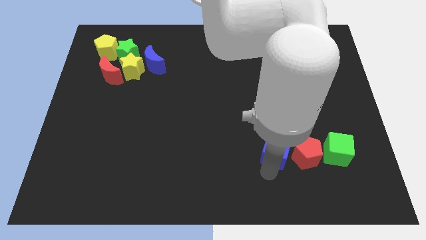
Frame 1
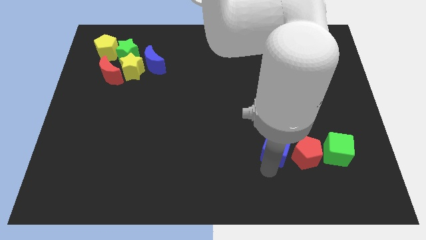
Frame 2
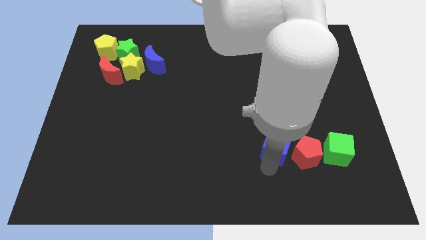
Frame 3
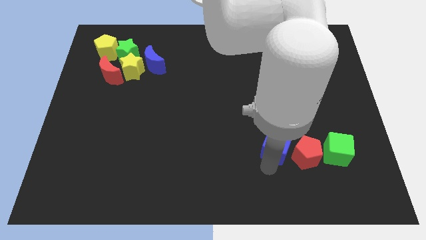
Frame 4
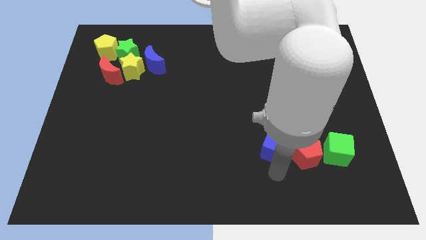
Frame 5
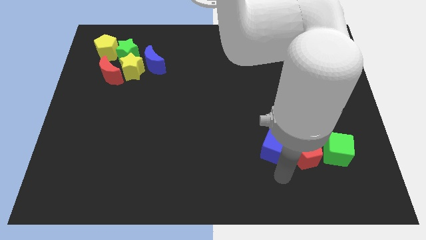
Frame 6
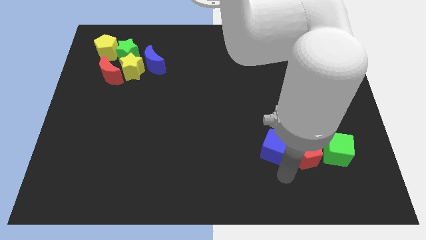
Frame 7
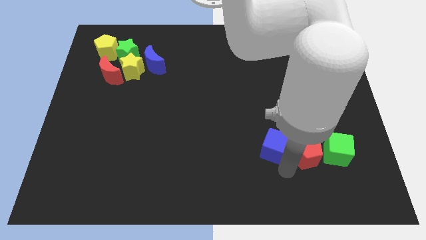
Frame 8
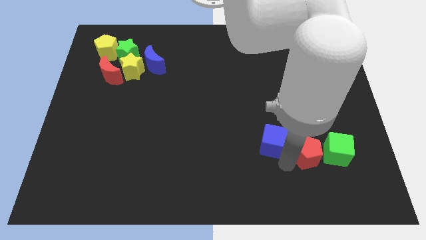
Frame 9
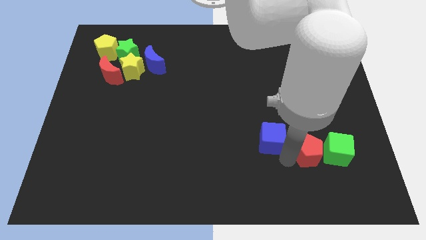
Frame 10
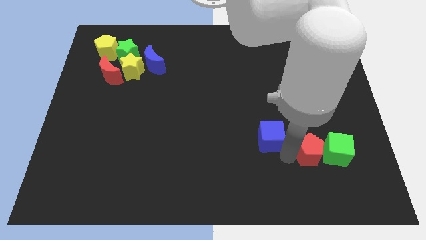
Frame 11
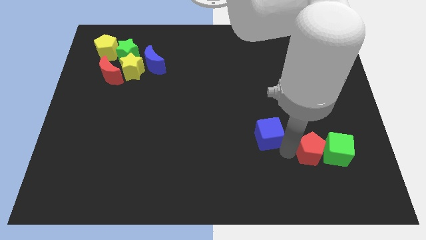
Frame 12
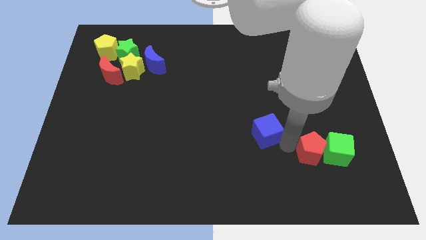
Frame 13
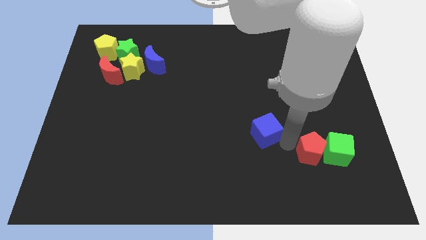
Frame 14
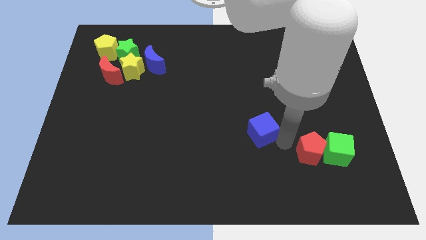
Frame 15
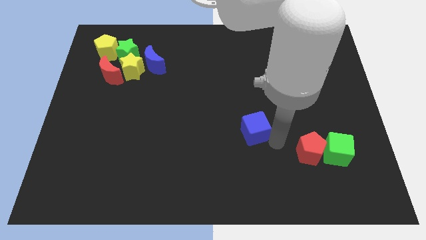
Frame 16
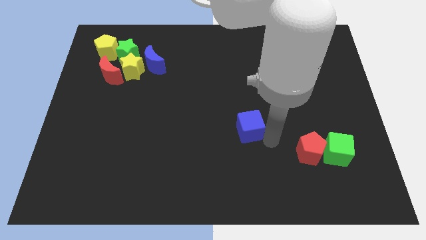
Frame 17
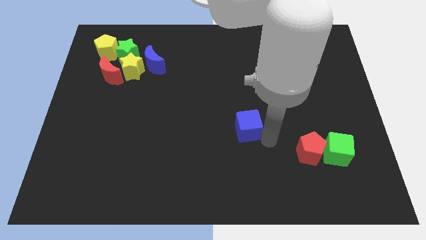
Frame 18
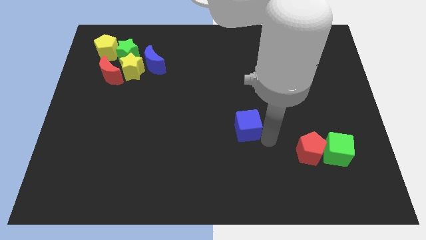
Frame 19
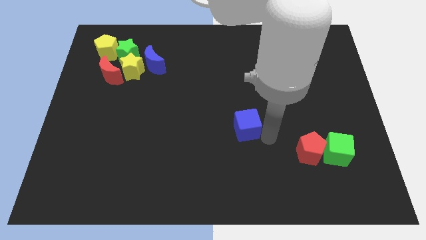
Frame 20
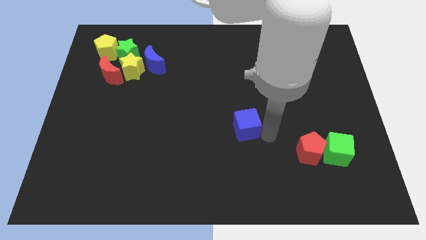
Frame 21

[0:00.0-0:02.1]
move the blue cube away from the red pentagon

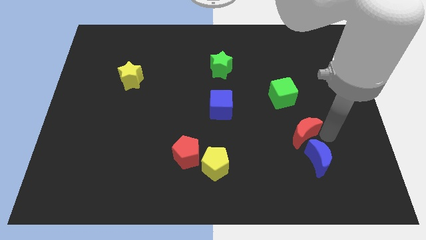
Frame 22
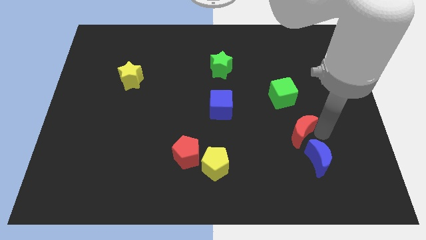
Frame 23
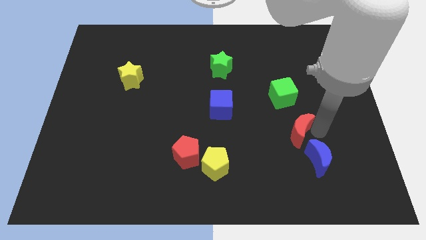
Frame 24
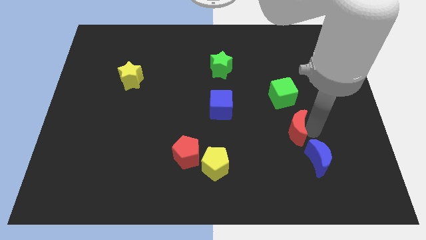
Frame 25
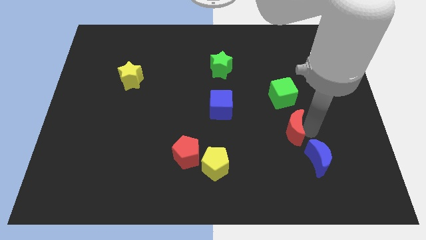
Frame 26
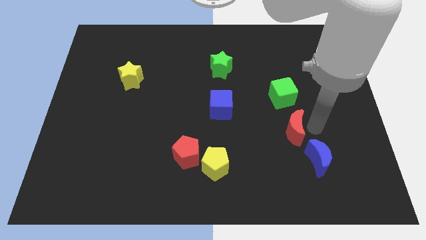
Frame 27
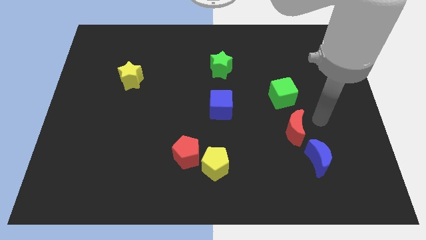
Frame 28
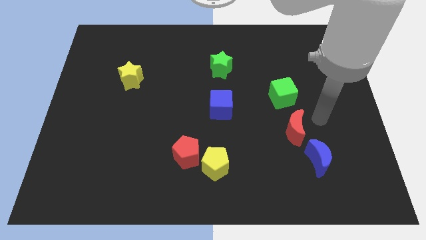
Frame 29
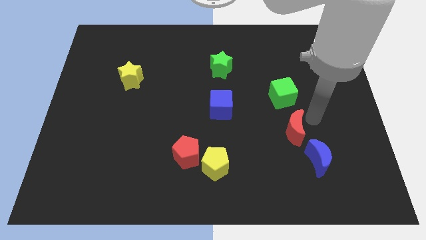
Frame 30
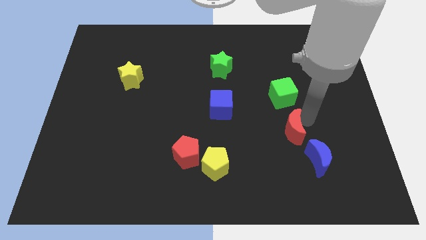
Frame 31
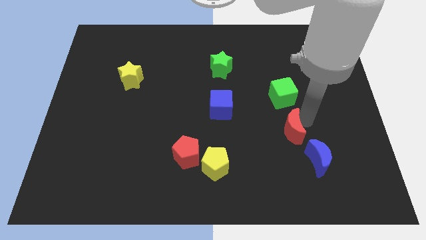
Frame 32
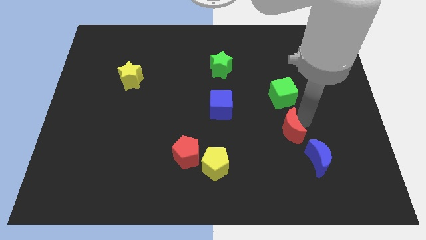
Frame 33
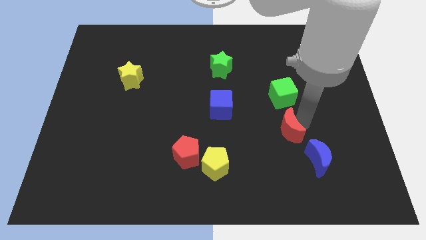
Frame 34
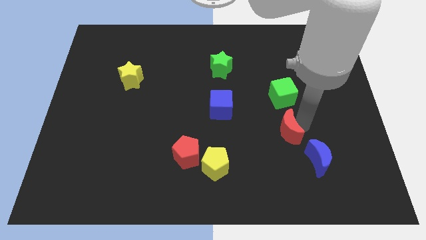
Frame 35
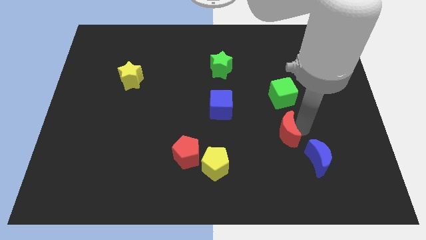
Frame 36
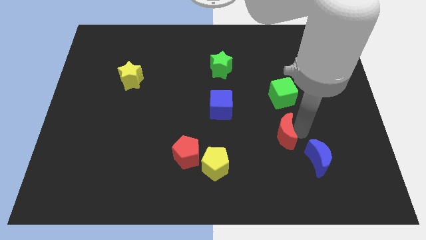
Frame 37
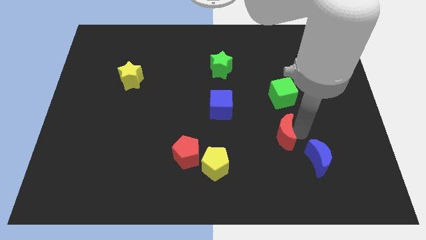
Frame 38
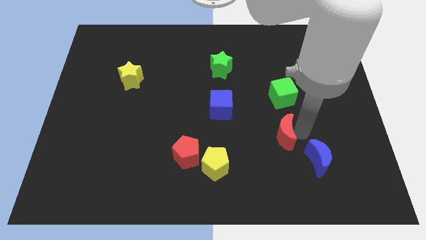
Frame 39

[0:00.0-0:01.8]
adjust the red moon below green cube

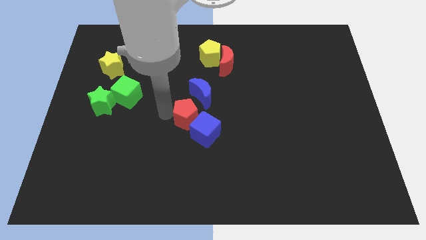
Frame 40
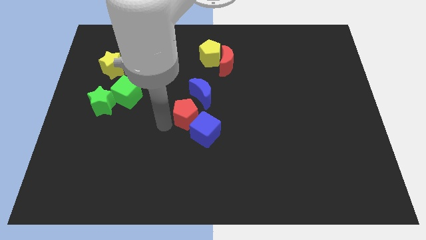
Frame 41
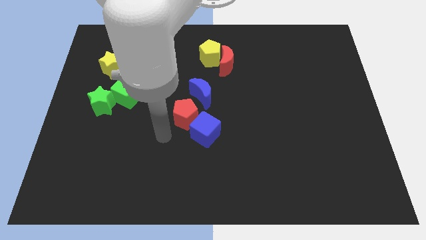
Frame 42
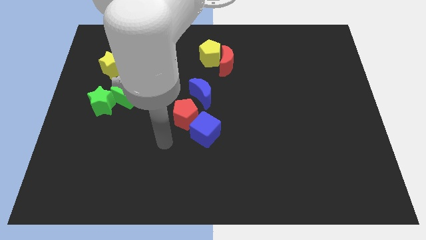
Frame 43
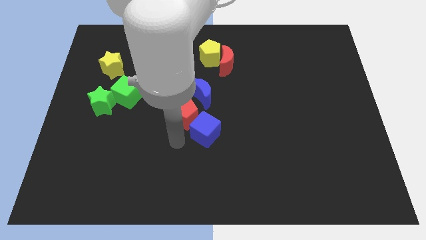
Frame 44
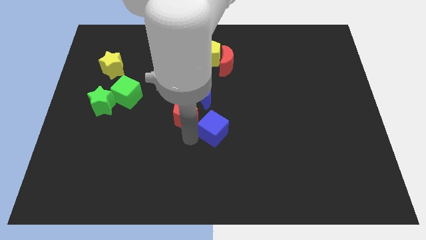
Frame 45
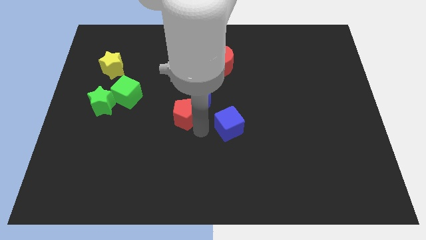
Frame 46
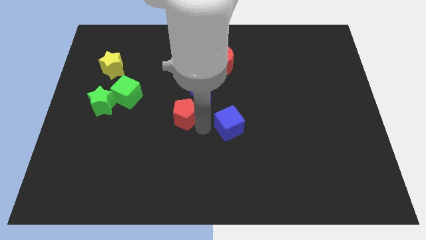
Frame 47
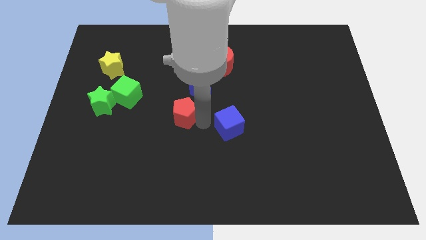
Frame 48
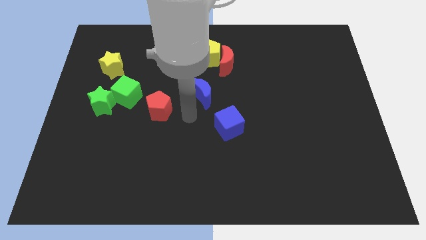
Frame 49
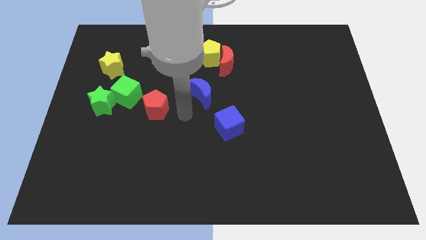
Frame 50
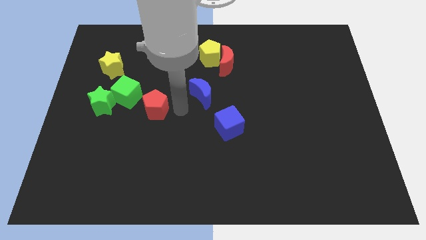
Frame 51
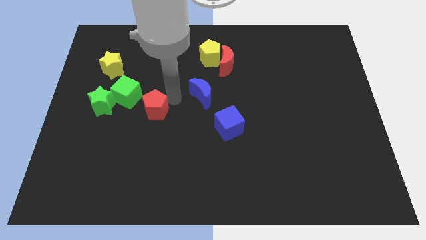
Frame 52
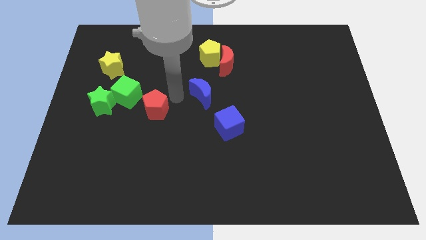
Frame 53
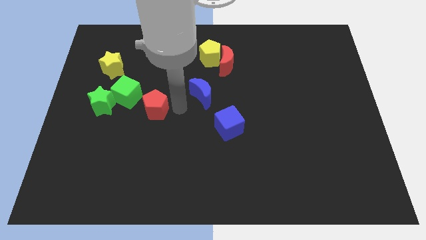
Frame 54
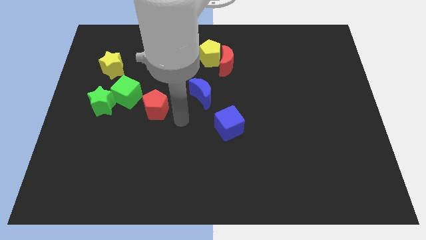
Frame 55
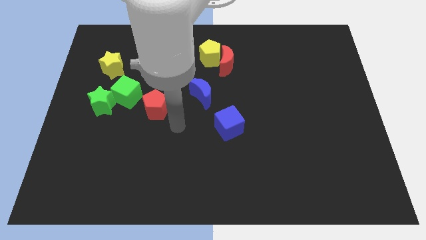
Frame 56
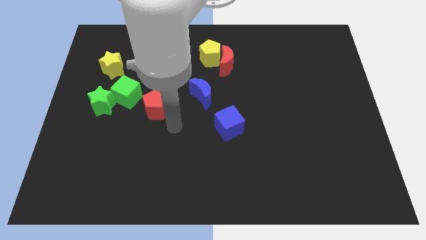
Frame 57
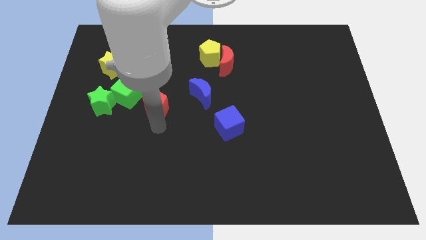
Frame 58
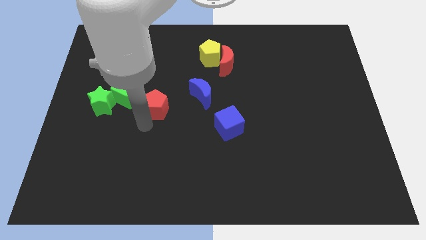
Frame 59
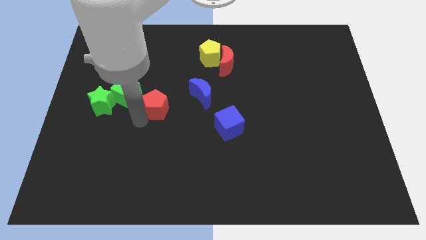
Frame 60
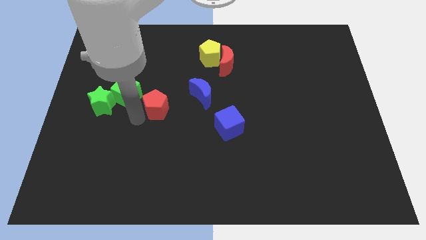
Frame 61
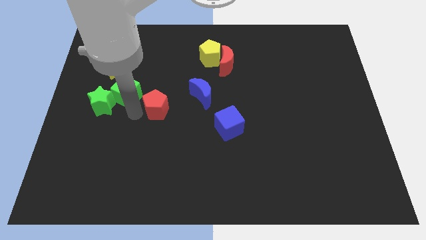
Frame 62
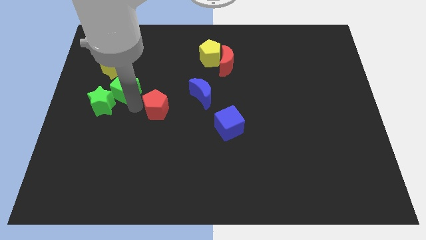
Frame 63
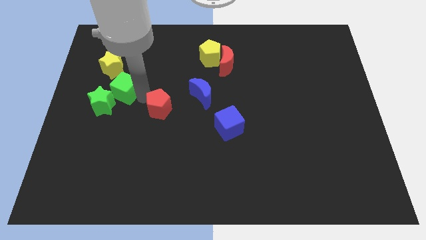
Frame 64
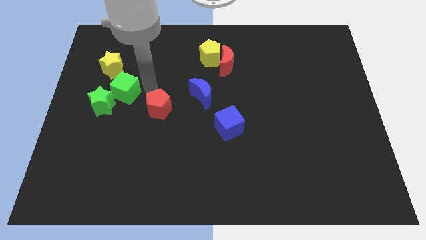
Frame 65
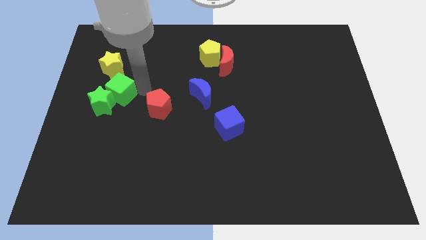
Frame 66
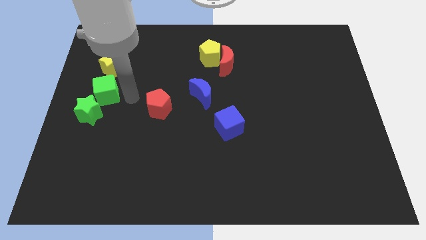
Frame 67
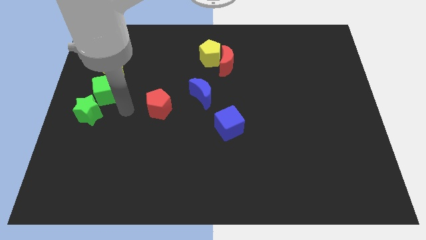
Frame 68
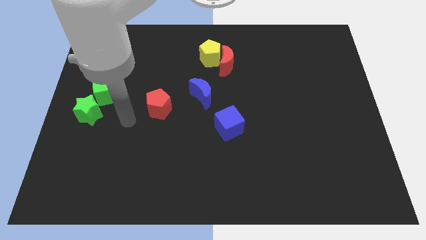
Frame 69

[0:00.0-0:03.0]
move green cube to the bottom of yellow star

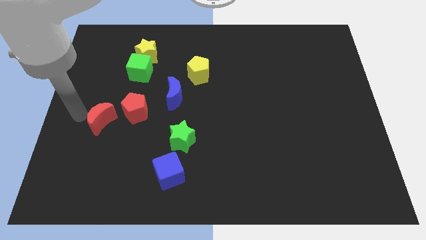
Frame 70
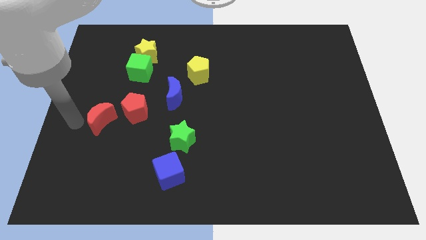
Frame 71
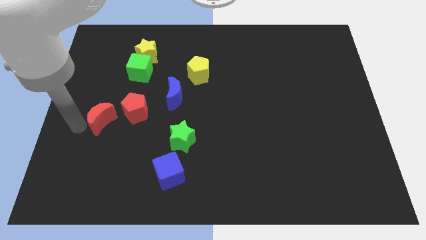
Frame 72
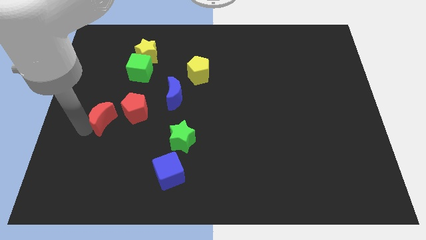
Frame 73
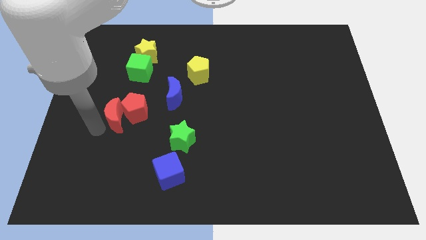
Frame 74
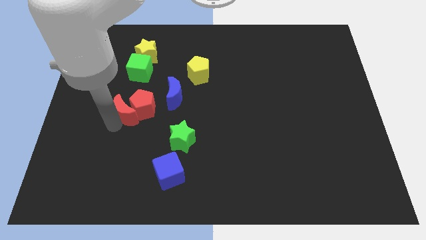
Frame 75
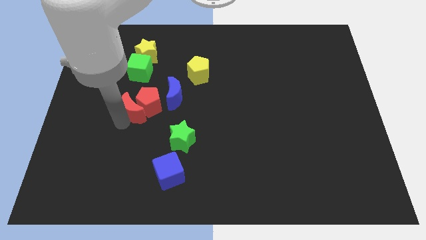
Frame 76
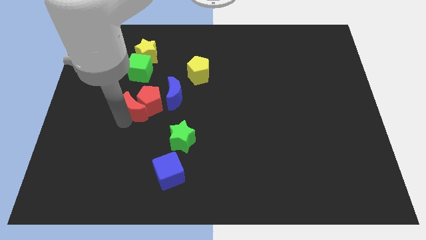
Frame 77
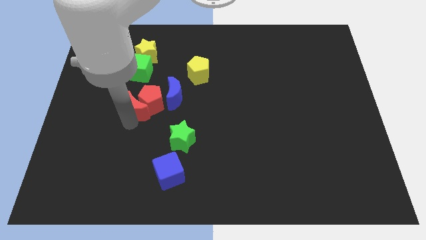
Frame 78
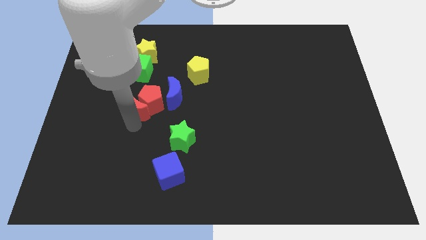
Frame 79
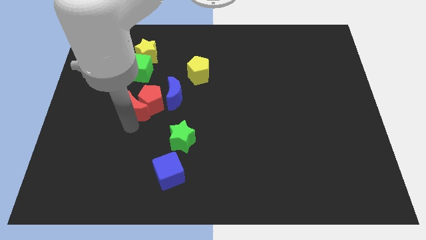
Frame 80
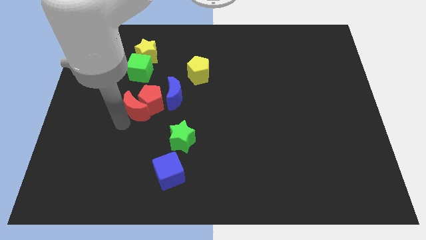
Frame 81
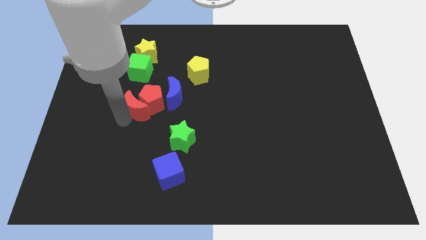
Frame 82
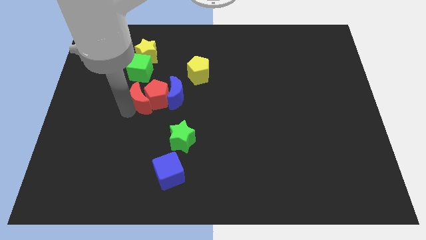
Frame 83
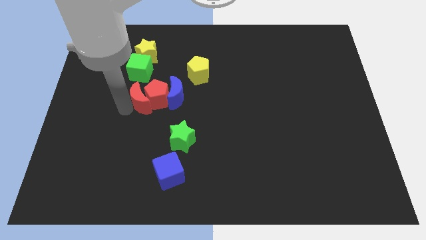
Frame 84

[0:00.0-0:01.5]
push the red pentagon with red moon to the left of the blue moon

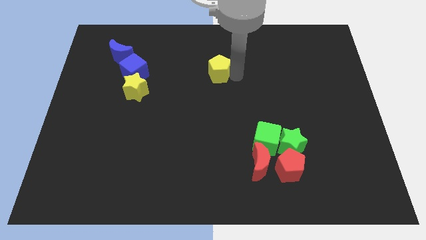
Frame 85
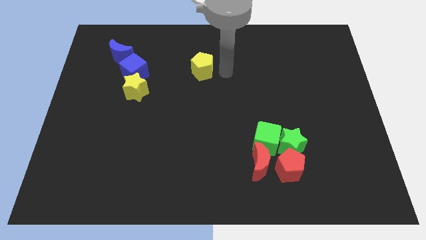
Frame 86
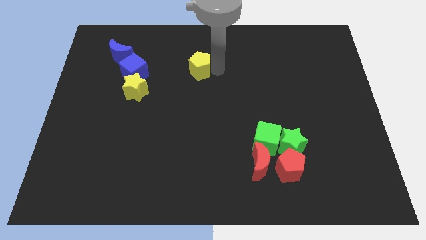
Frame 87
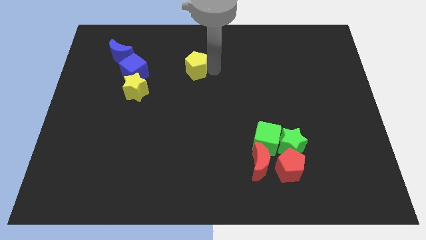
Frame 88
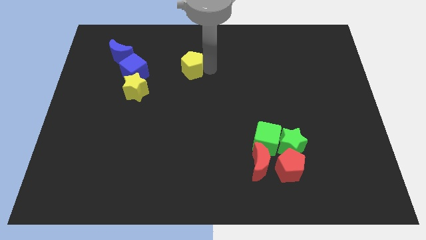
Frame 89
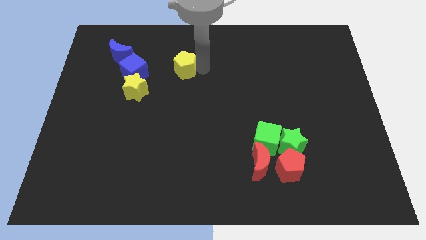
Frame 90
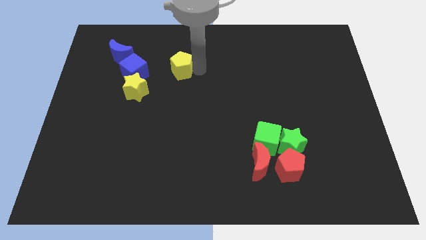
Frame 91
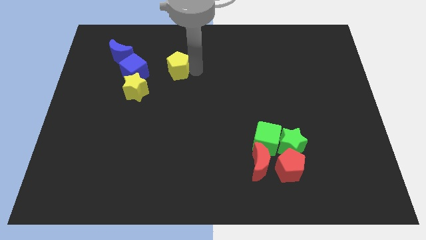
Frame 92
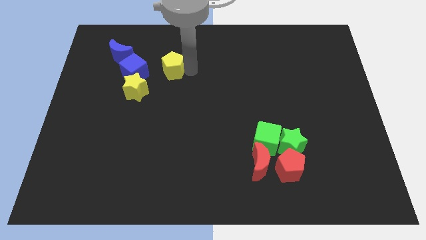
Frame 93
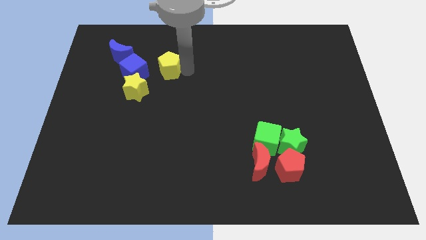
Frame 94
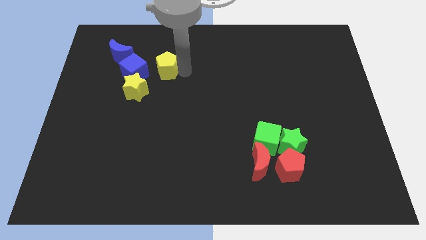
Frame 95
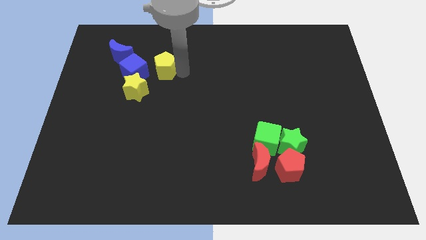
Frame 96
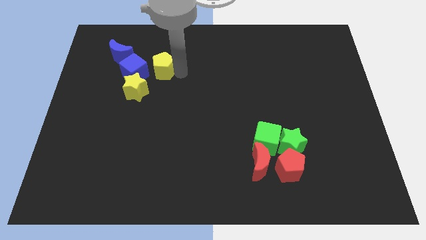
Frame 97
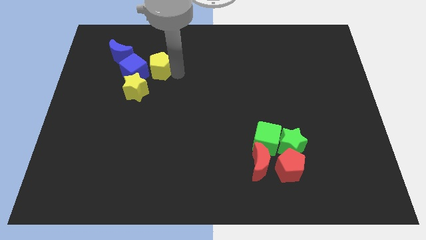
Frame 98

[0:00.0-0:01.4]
push yellow pentagon into the blue cube
